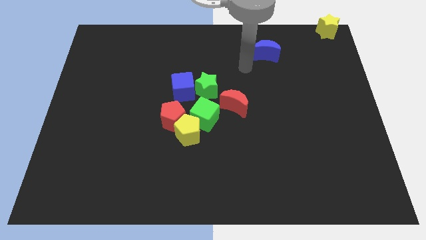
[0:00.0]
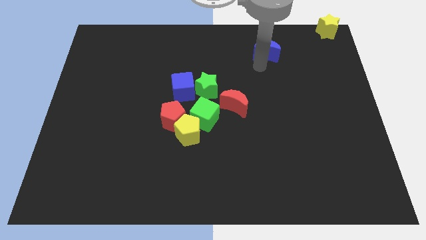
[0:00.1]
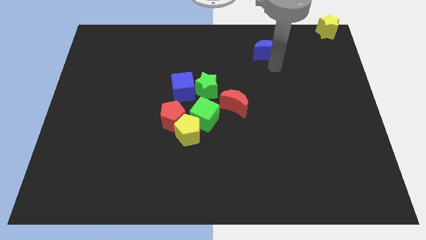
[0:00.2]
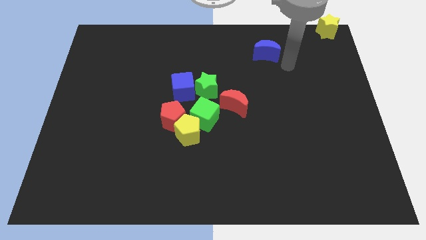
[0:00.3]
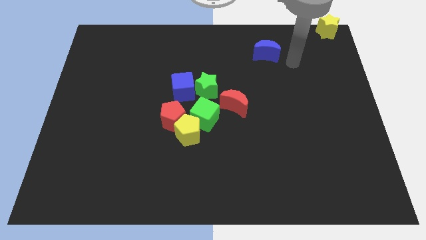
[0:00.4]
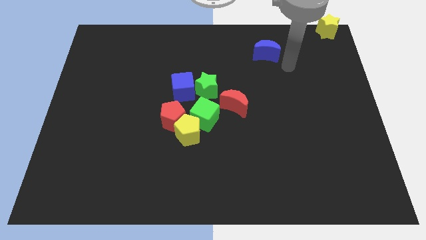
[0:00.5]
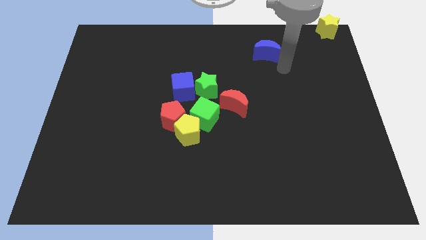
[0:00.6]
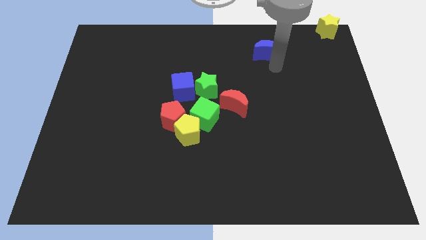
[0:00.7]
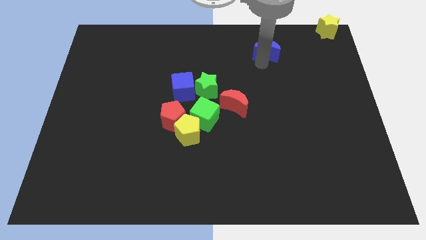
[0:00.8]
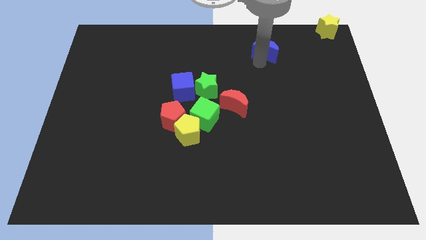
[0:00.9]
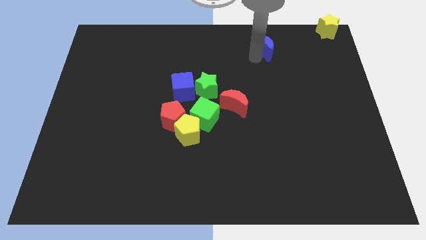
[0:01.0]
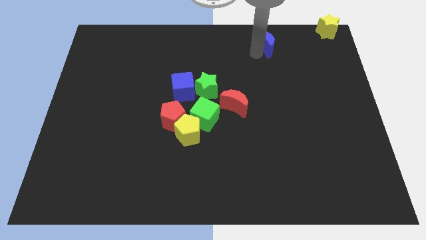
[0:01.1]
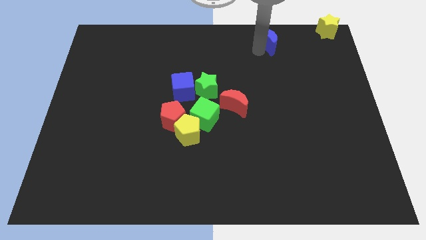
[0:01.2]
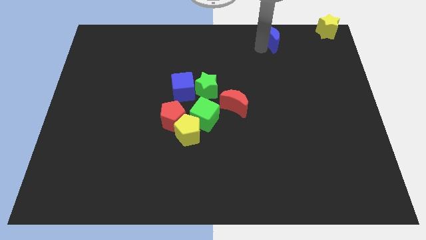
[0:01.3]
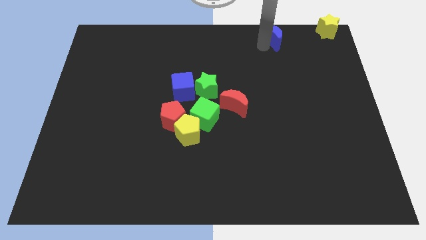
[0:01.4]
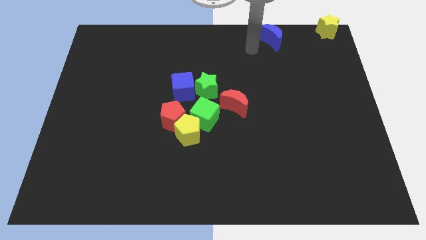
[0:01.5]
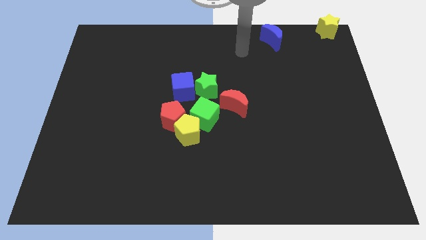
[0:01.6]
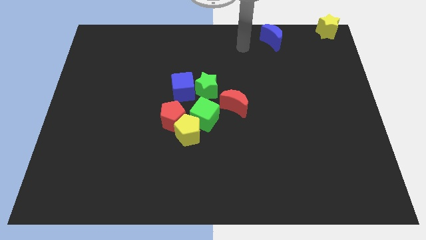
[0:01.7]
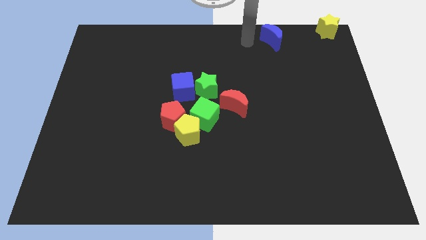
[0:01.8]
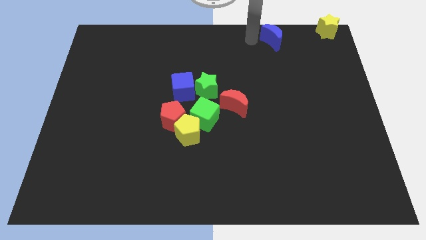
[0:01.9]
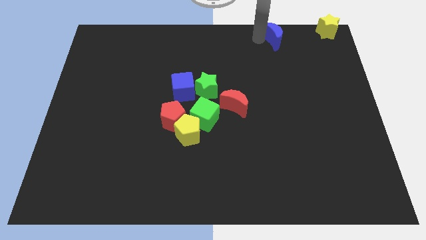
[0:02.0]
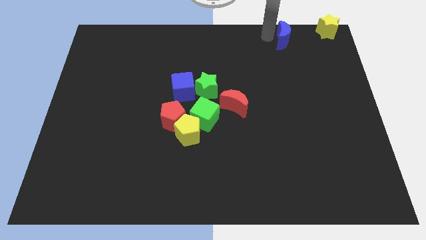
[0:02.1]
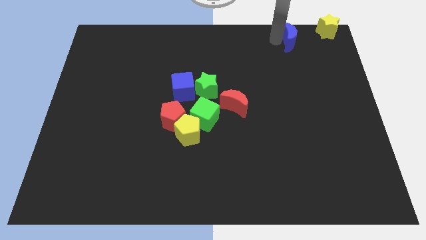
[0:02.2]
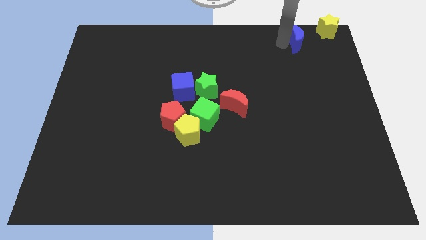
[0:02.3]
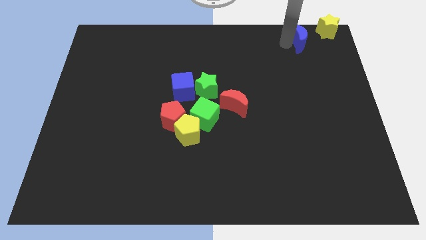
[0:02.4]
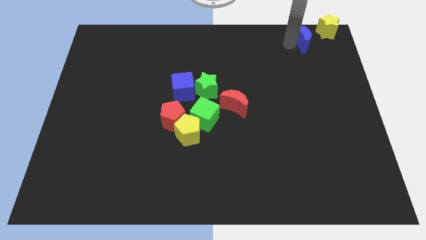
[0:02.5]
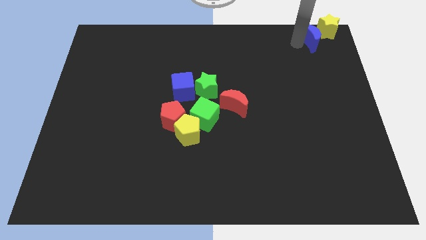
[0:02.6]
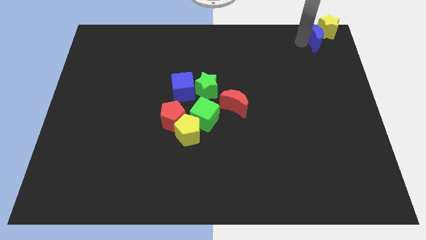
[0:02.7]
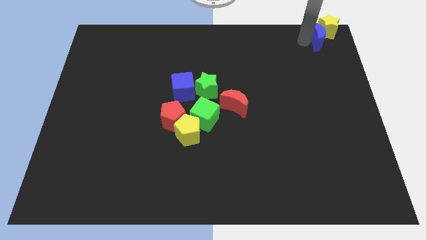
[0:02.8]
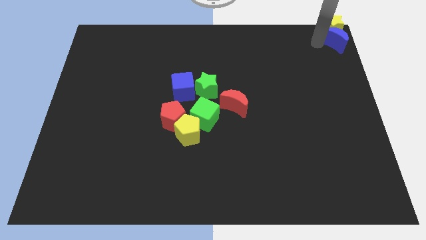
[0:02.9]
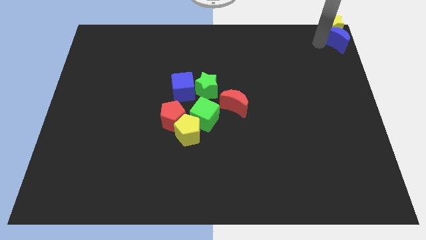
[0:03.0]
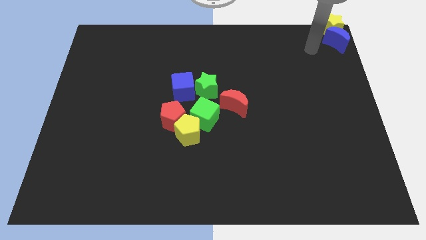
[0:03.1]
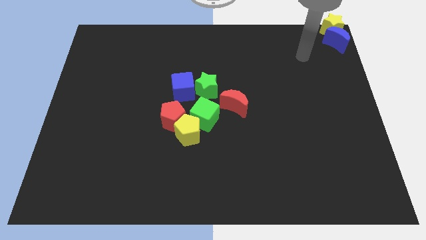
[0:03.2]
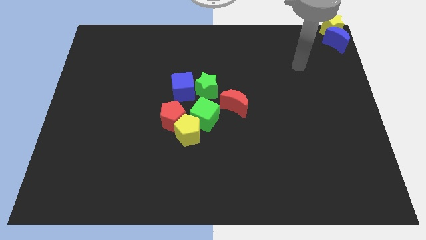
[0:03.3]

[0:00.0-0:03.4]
place the blue crescent below the yellow star

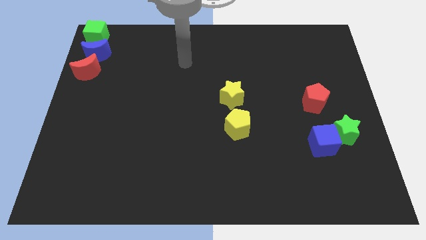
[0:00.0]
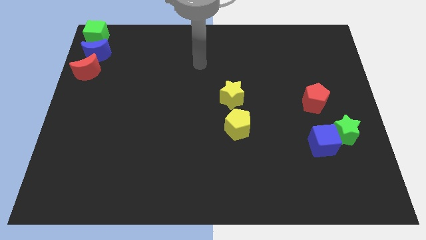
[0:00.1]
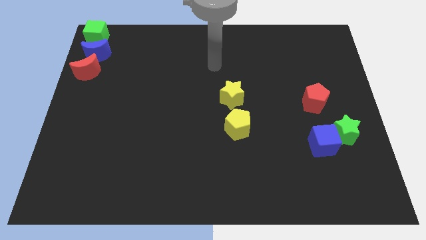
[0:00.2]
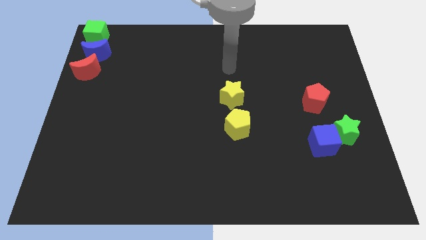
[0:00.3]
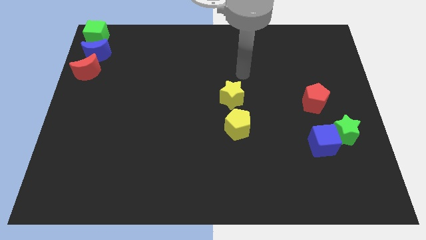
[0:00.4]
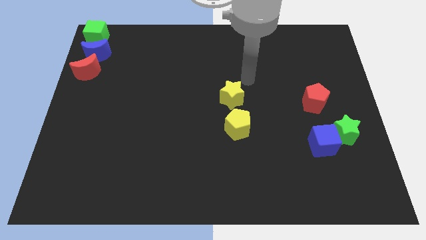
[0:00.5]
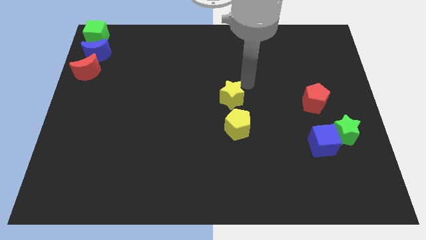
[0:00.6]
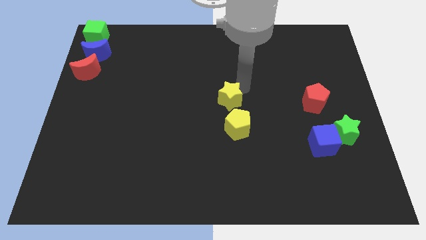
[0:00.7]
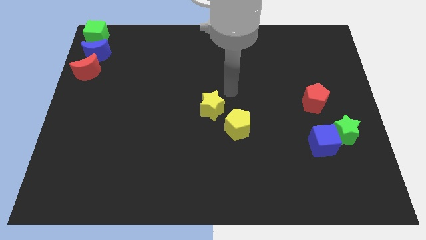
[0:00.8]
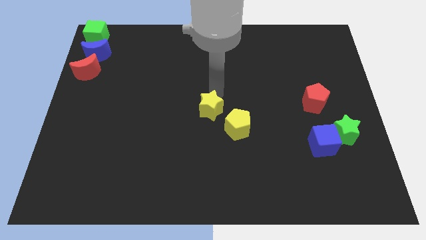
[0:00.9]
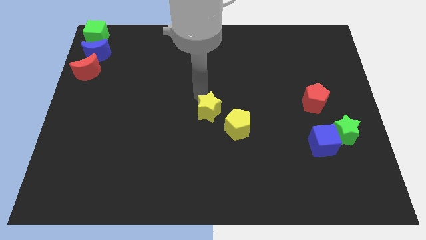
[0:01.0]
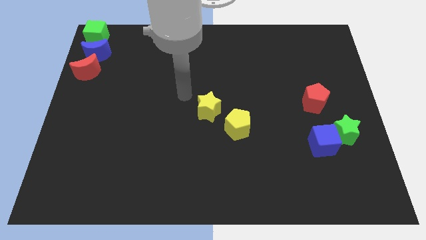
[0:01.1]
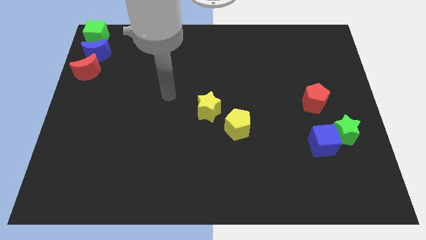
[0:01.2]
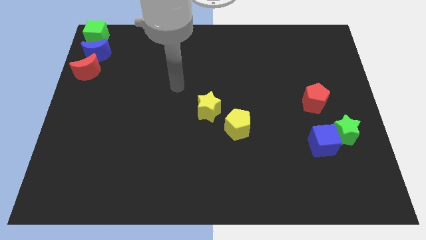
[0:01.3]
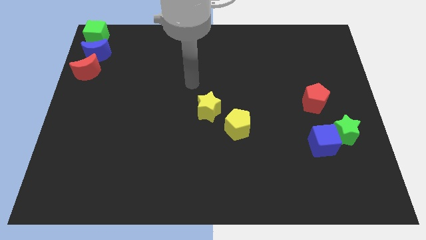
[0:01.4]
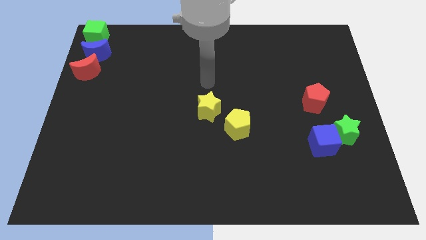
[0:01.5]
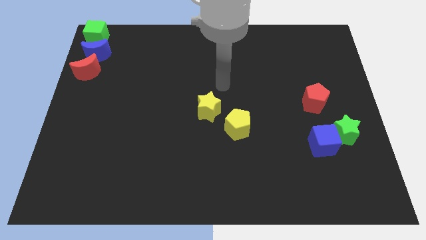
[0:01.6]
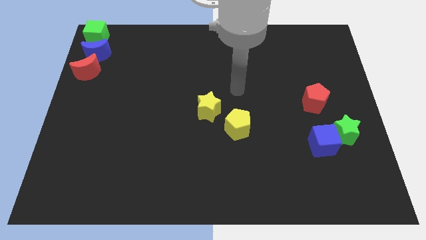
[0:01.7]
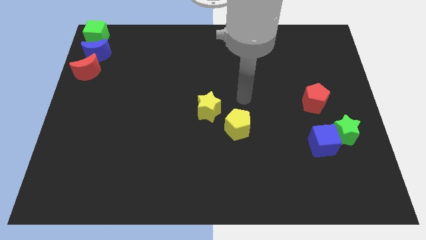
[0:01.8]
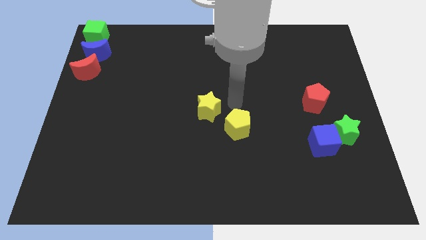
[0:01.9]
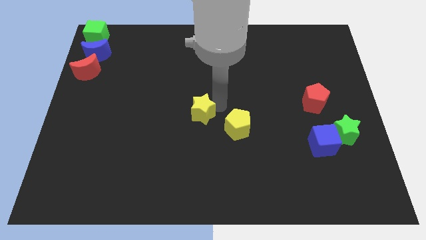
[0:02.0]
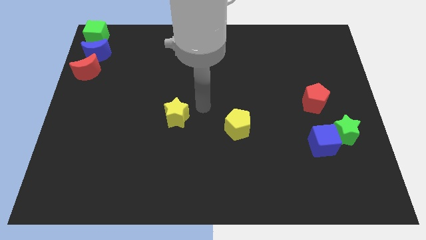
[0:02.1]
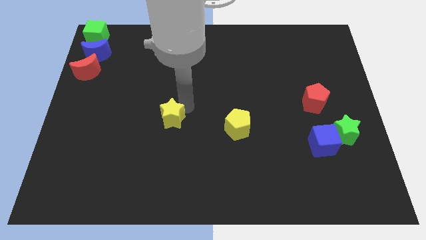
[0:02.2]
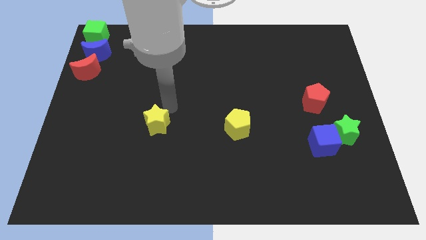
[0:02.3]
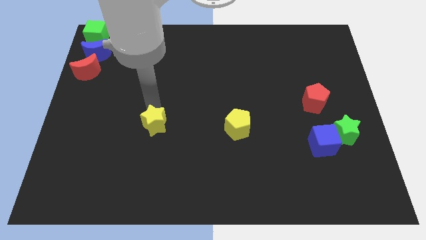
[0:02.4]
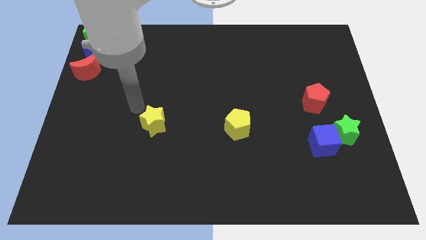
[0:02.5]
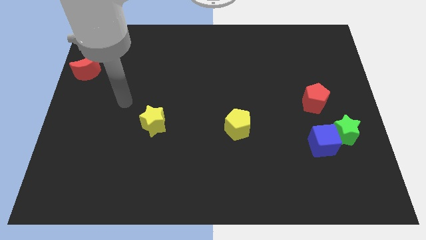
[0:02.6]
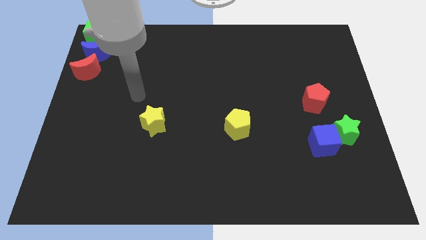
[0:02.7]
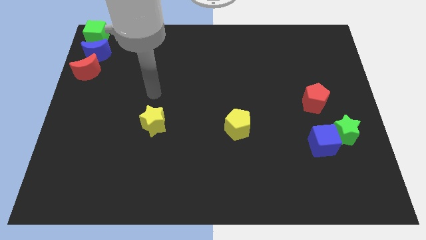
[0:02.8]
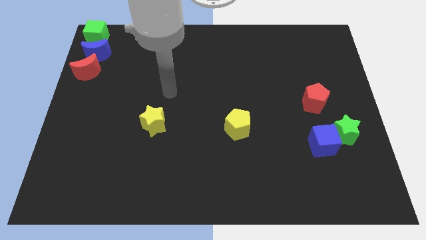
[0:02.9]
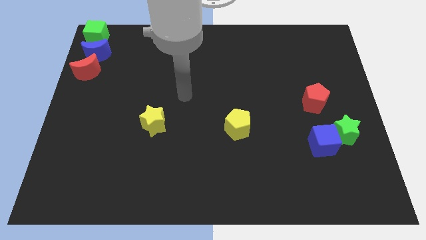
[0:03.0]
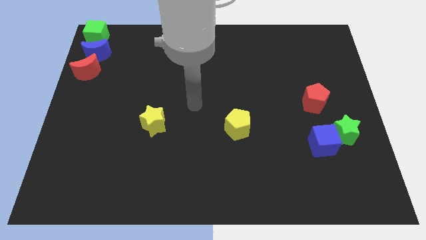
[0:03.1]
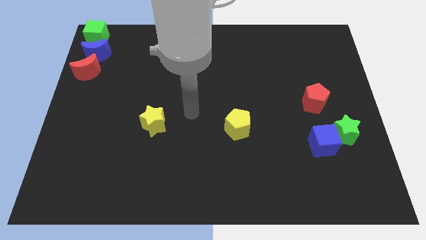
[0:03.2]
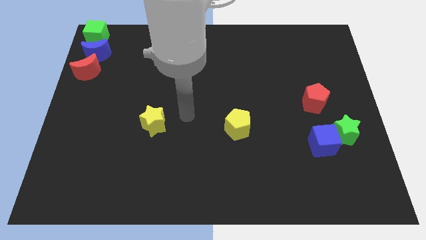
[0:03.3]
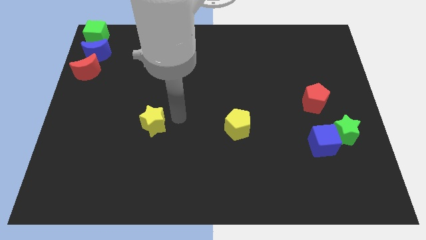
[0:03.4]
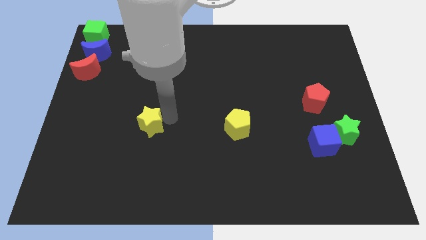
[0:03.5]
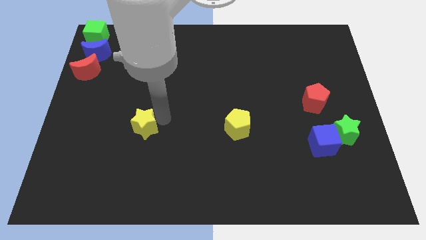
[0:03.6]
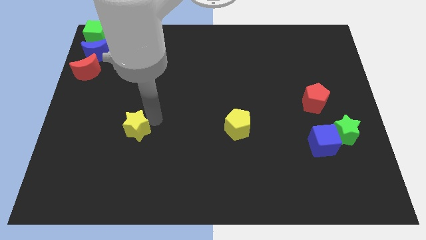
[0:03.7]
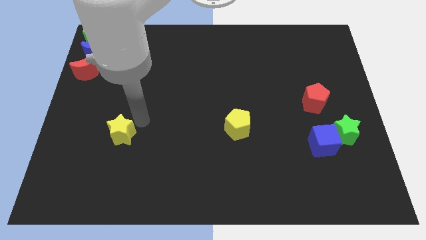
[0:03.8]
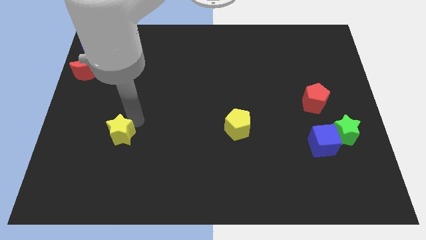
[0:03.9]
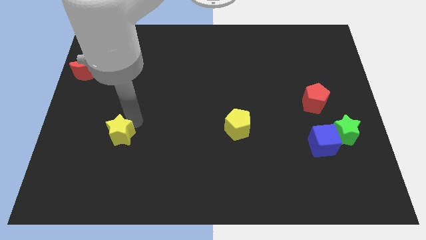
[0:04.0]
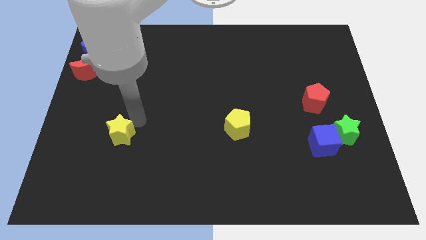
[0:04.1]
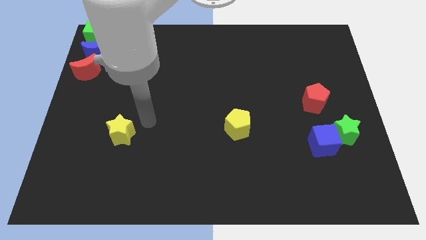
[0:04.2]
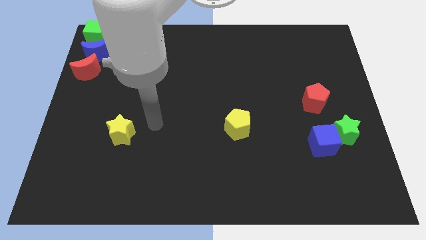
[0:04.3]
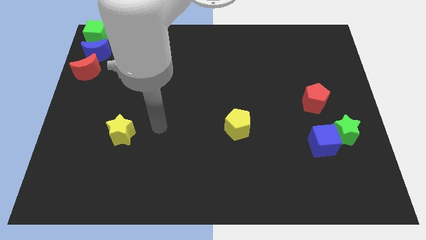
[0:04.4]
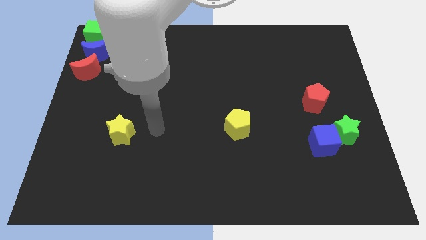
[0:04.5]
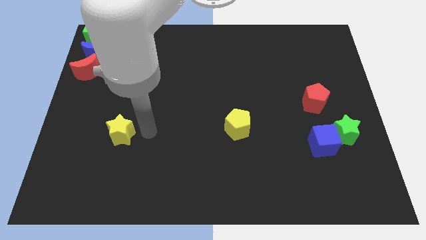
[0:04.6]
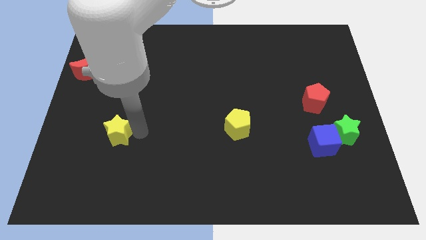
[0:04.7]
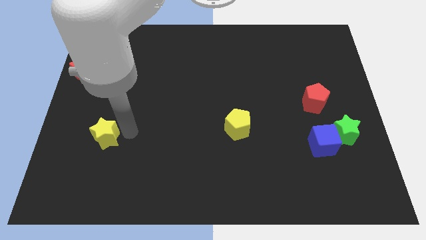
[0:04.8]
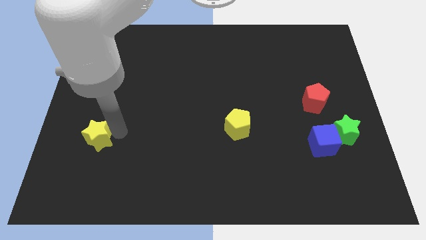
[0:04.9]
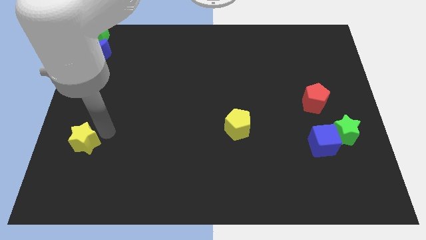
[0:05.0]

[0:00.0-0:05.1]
move yellow star apart from the yellow pentagon

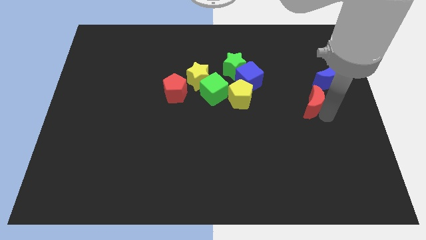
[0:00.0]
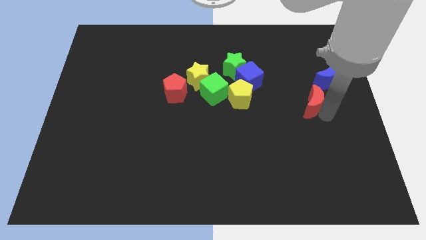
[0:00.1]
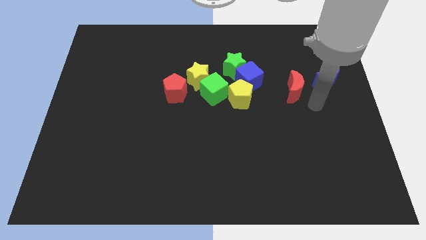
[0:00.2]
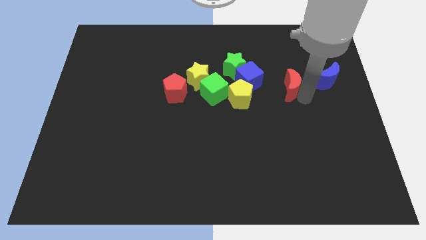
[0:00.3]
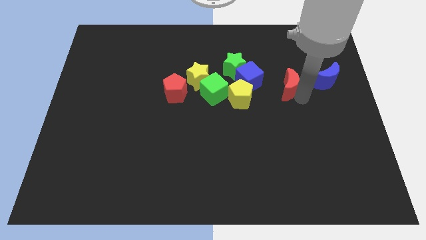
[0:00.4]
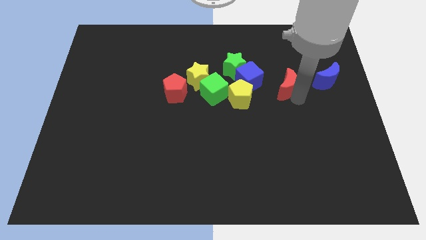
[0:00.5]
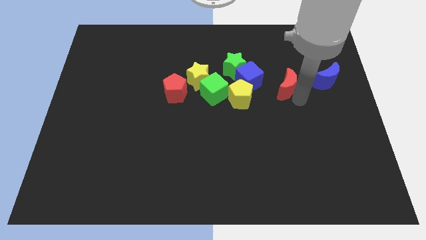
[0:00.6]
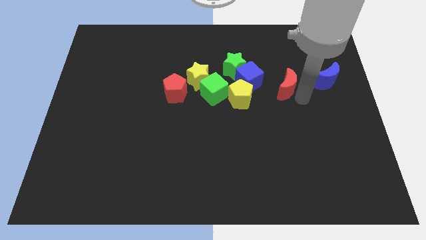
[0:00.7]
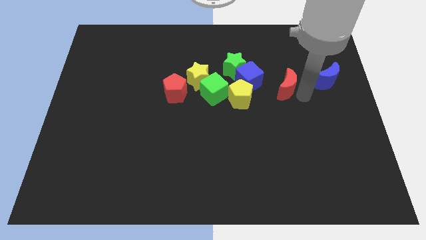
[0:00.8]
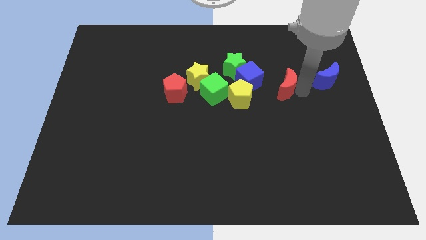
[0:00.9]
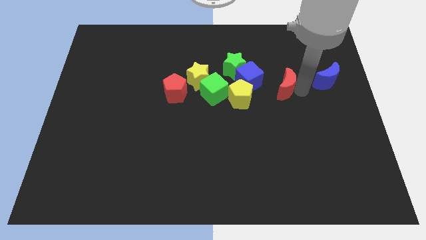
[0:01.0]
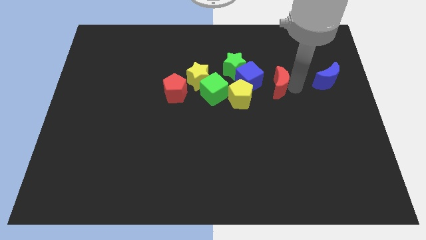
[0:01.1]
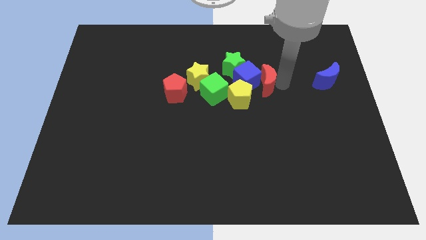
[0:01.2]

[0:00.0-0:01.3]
separate the red moon from the blue moon
